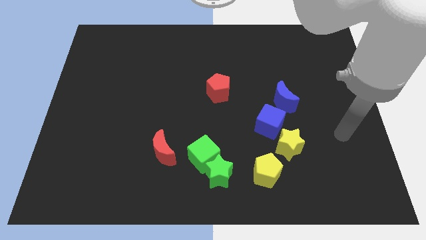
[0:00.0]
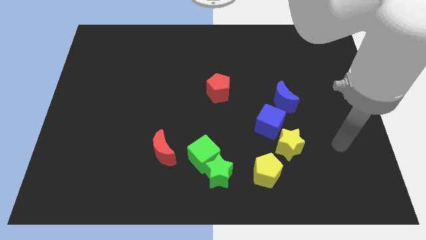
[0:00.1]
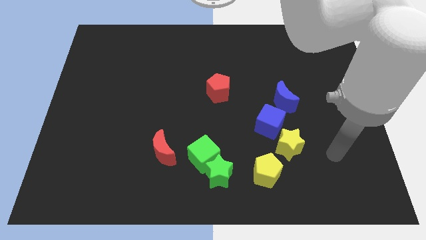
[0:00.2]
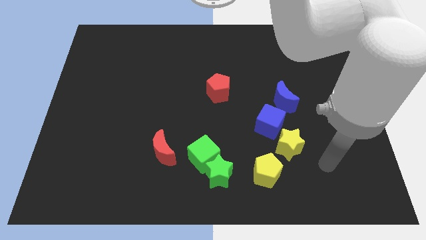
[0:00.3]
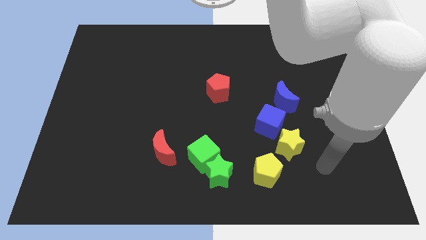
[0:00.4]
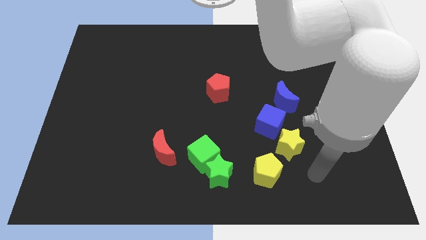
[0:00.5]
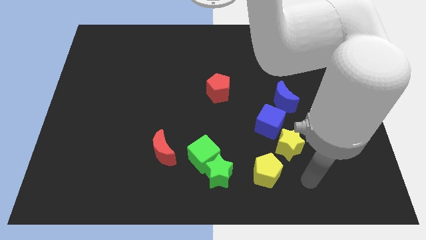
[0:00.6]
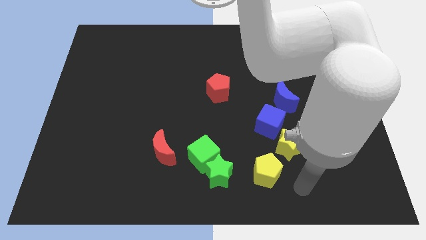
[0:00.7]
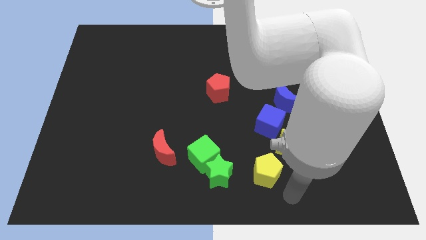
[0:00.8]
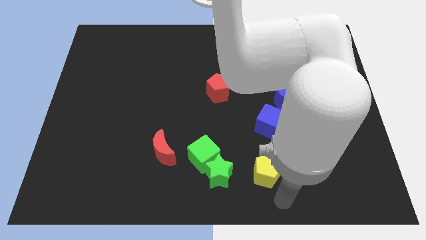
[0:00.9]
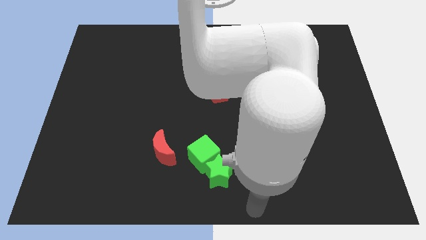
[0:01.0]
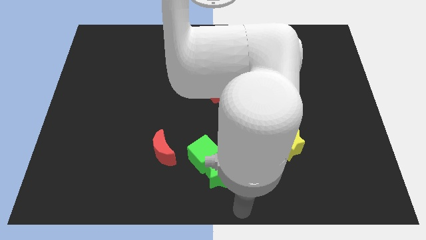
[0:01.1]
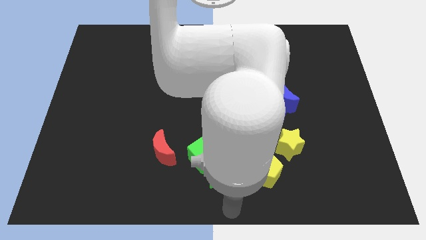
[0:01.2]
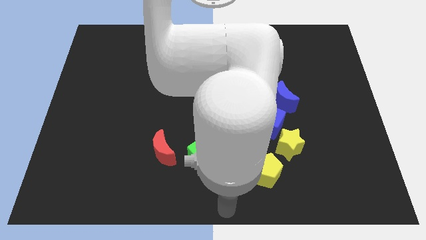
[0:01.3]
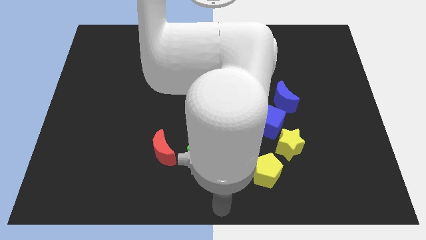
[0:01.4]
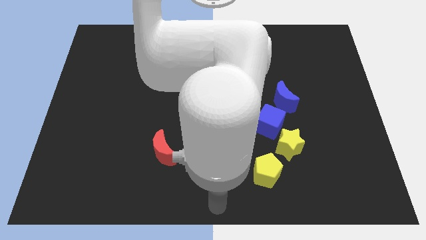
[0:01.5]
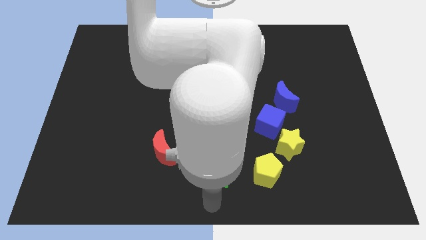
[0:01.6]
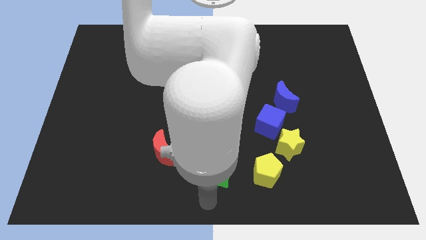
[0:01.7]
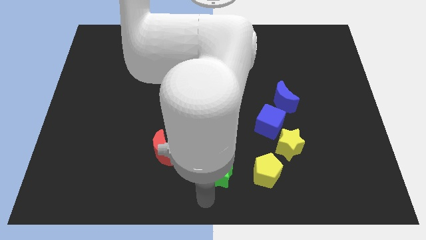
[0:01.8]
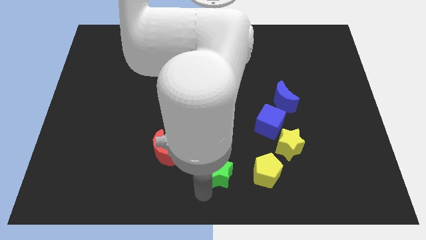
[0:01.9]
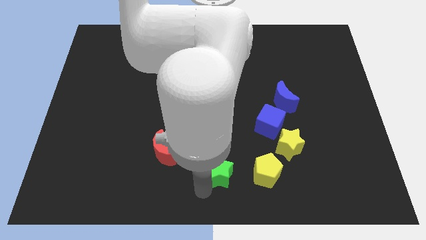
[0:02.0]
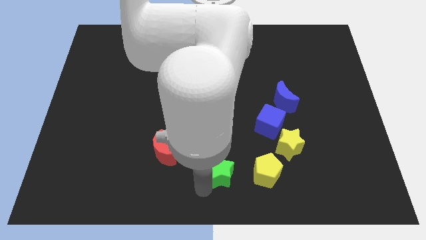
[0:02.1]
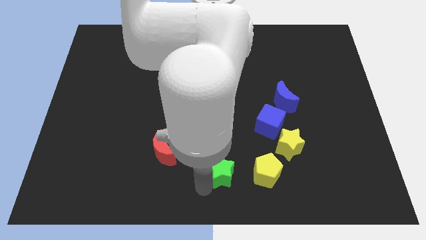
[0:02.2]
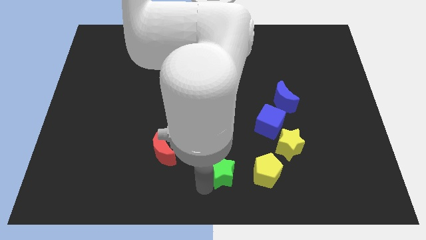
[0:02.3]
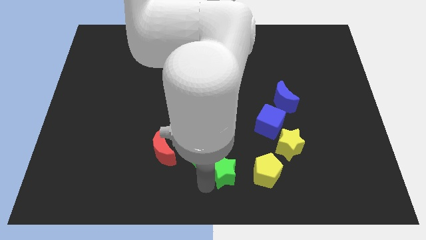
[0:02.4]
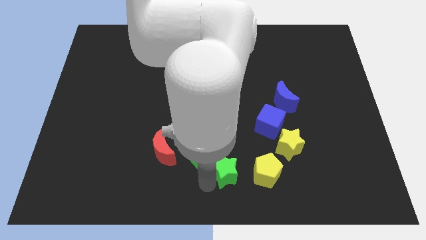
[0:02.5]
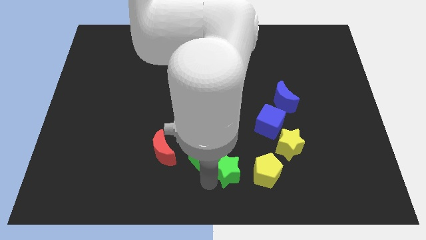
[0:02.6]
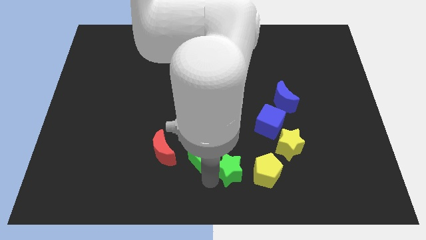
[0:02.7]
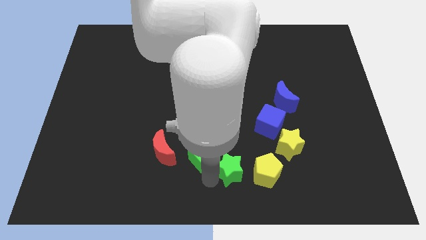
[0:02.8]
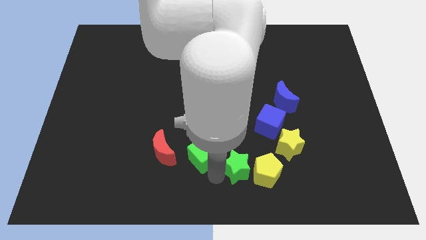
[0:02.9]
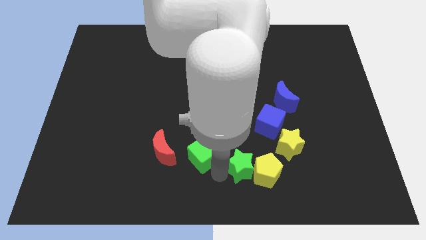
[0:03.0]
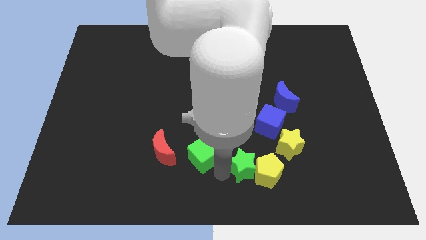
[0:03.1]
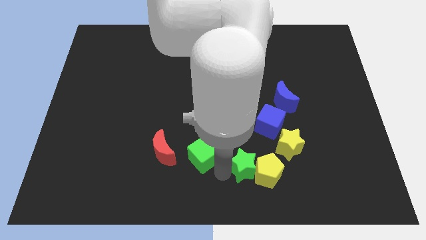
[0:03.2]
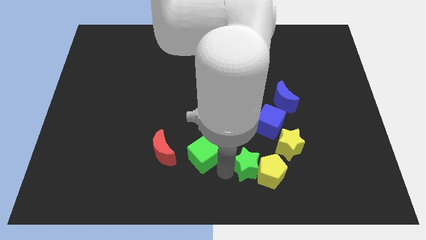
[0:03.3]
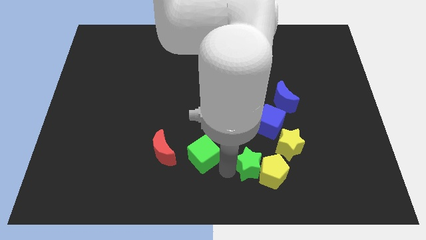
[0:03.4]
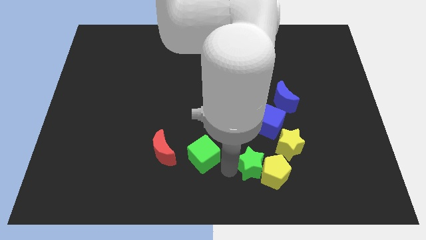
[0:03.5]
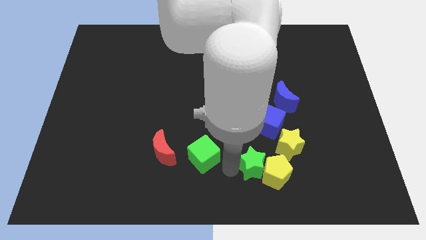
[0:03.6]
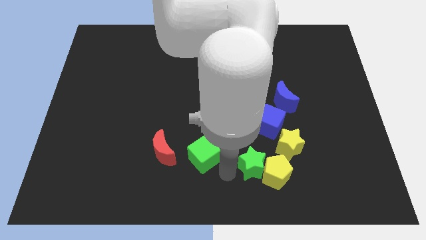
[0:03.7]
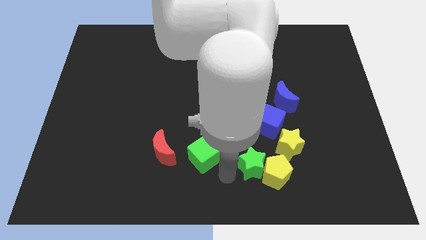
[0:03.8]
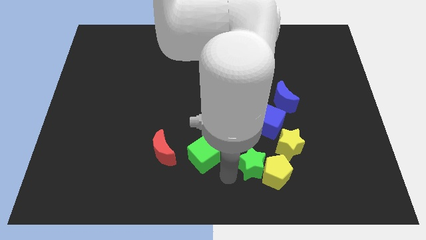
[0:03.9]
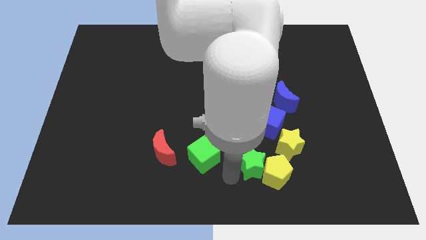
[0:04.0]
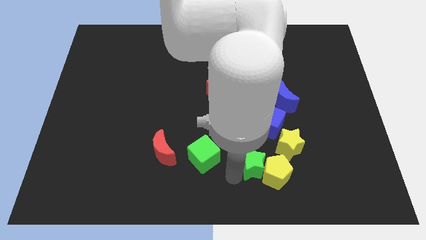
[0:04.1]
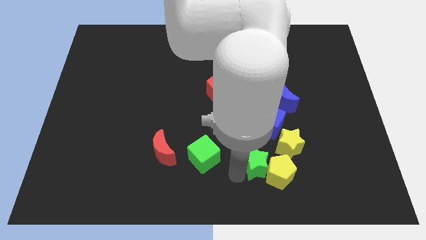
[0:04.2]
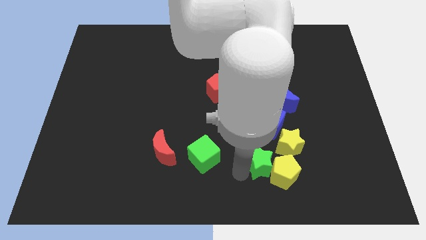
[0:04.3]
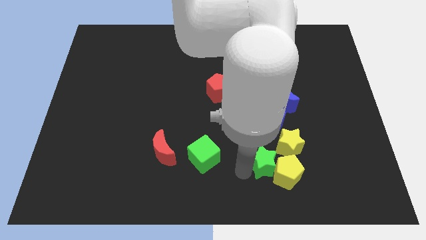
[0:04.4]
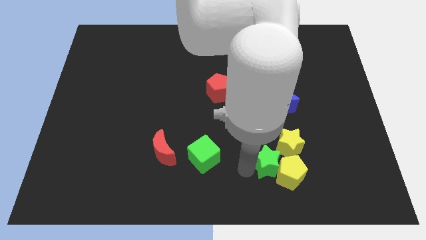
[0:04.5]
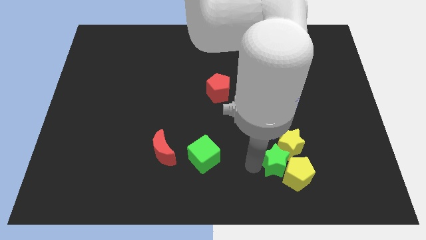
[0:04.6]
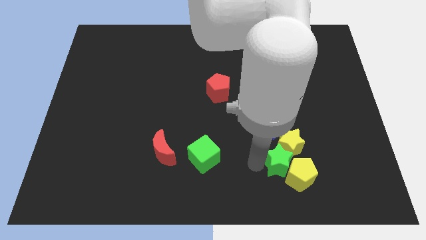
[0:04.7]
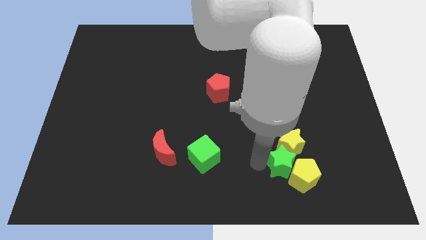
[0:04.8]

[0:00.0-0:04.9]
move the green star close to the yellow star

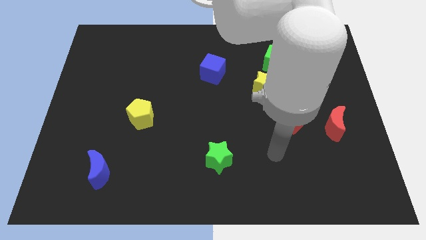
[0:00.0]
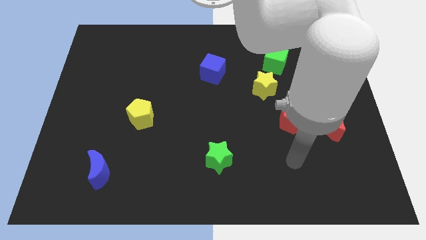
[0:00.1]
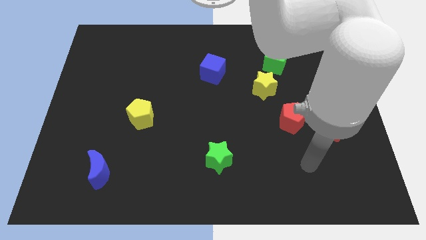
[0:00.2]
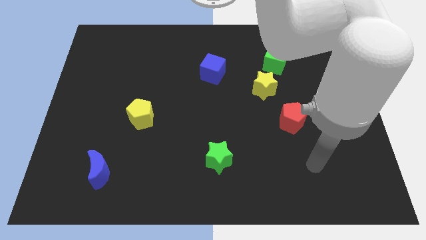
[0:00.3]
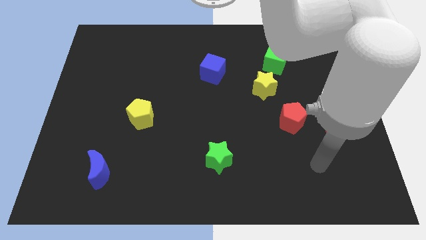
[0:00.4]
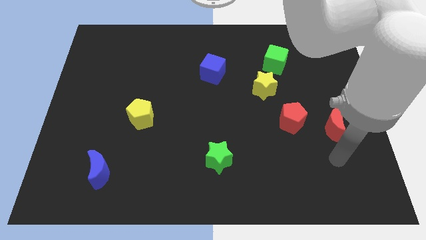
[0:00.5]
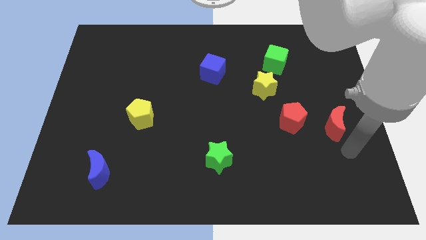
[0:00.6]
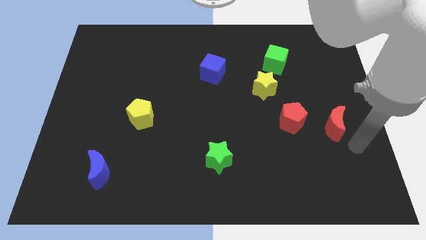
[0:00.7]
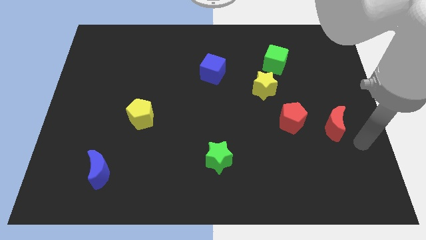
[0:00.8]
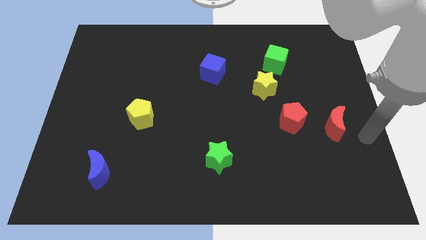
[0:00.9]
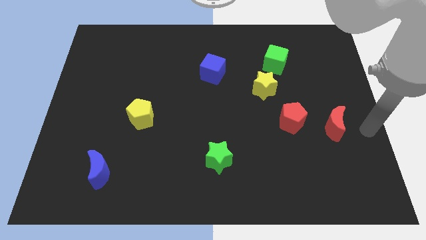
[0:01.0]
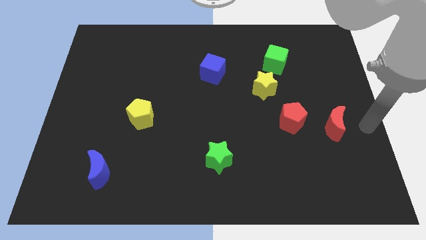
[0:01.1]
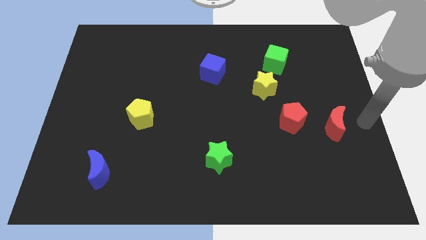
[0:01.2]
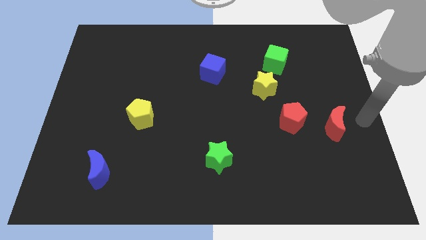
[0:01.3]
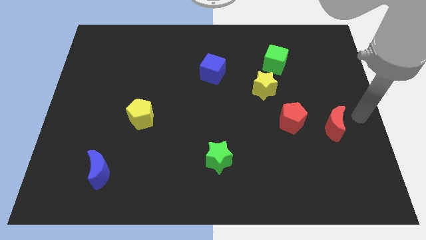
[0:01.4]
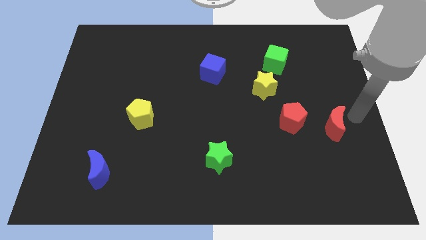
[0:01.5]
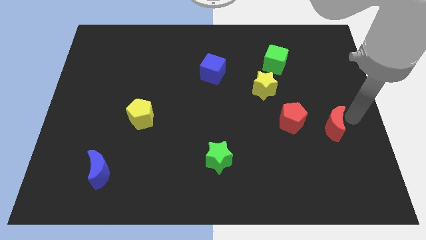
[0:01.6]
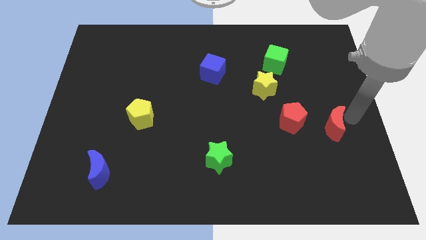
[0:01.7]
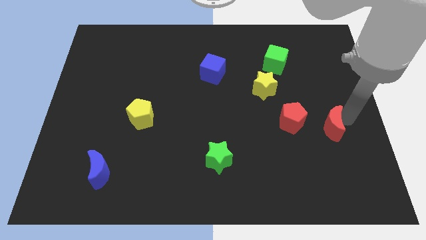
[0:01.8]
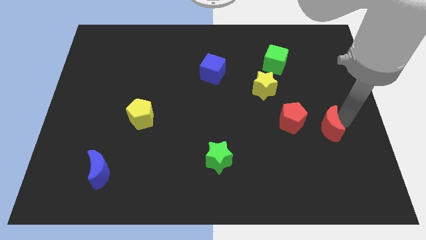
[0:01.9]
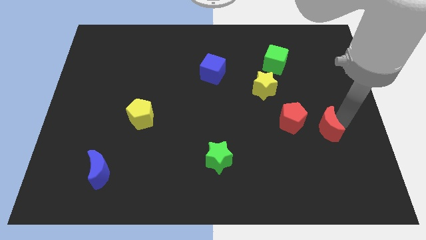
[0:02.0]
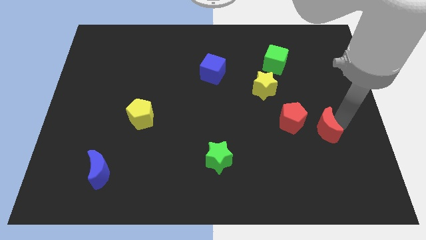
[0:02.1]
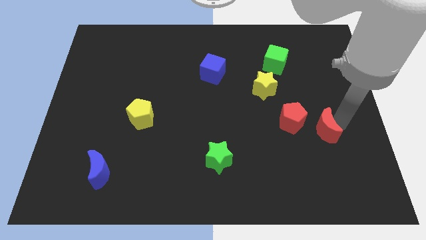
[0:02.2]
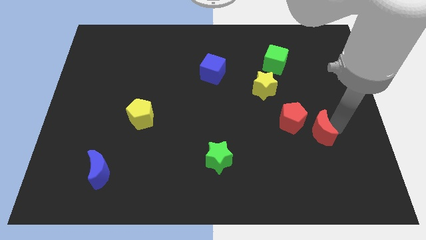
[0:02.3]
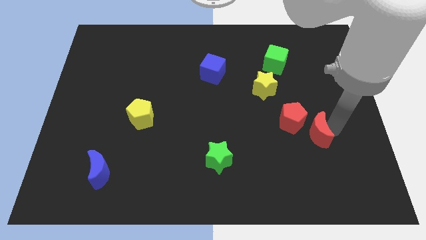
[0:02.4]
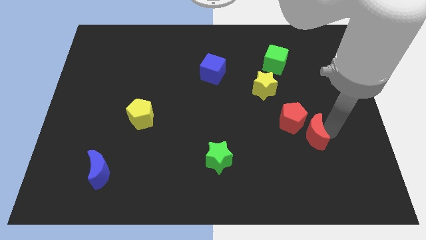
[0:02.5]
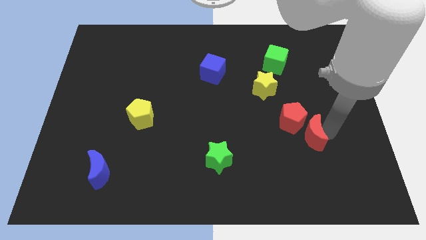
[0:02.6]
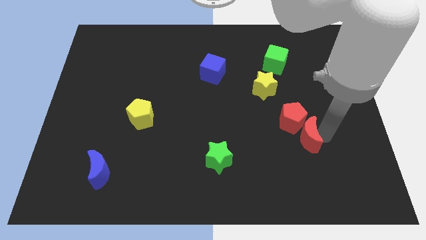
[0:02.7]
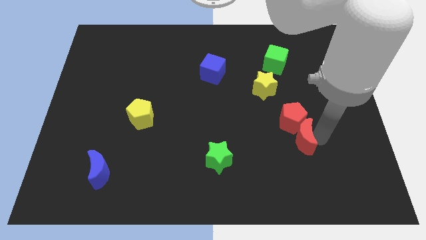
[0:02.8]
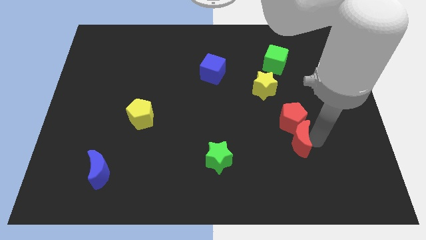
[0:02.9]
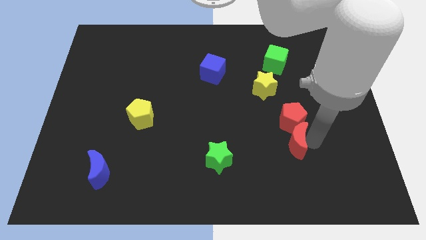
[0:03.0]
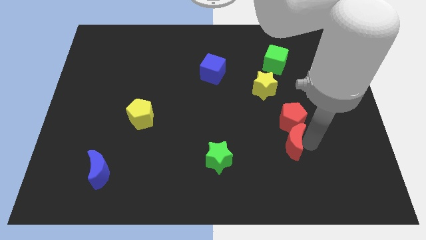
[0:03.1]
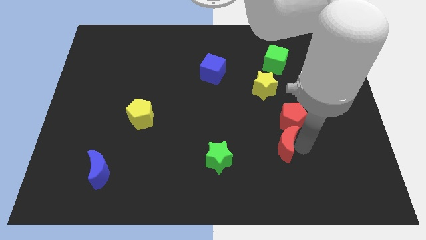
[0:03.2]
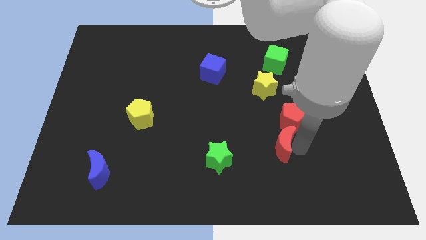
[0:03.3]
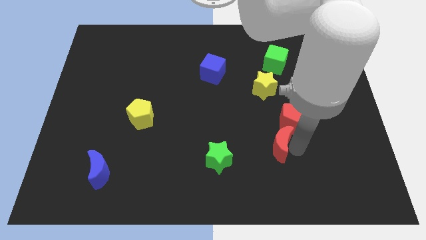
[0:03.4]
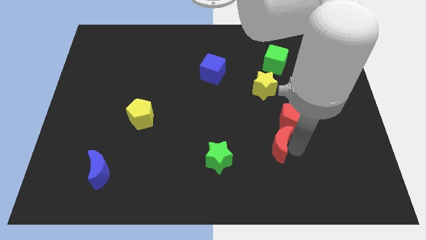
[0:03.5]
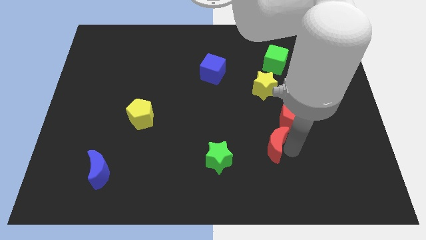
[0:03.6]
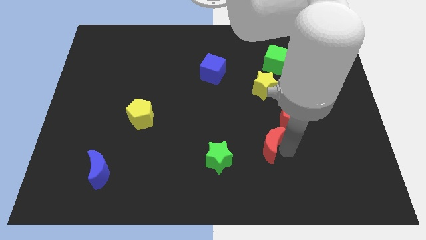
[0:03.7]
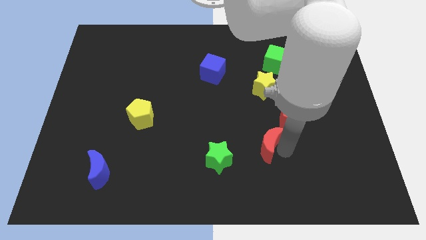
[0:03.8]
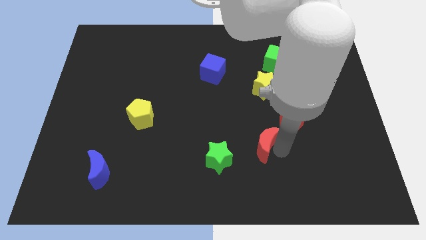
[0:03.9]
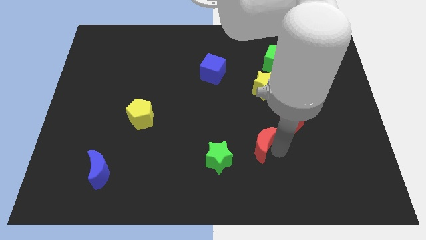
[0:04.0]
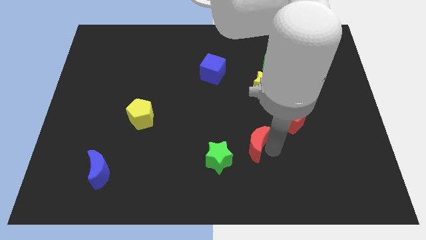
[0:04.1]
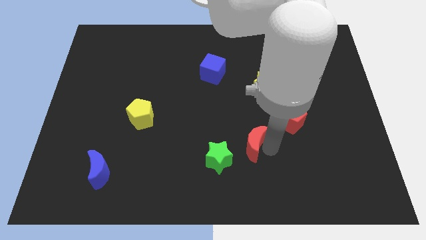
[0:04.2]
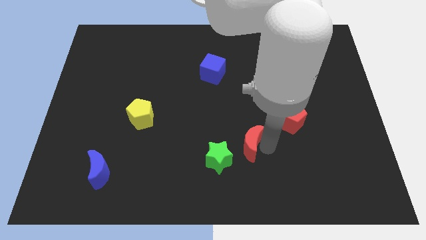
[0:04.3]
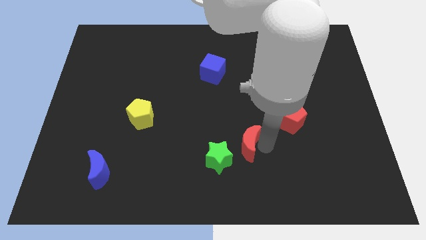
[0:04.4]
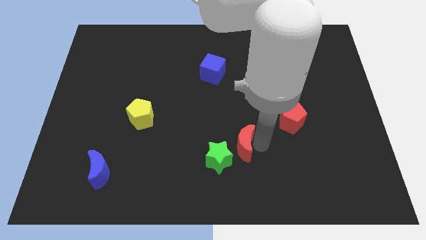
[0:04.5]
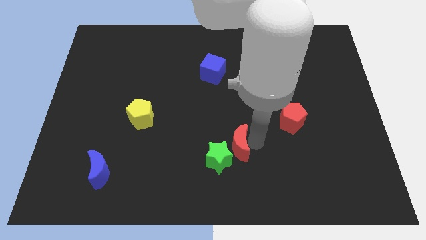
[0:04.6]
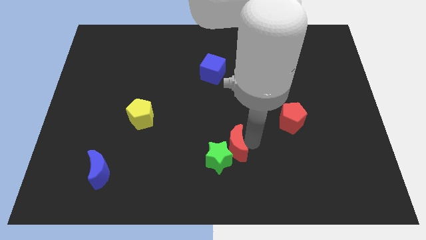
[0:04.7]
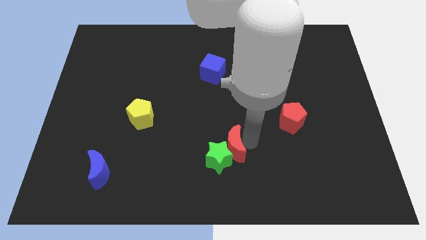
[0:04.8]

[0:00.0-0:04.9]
slide the red moon close to the green star
